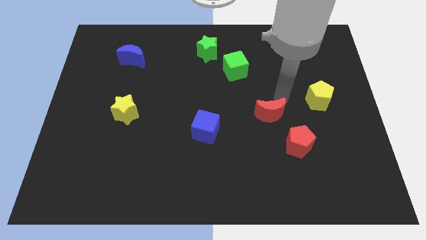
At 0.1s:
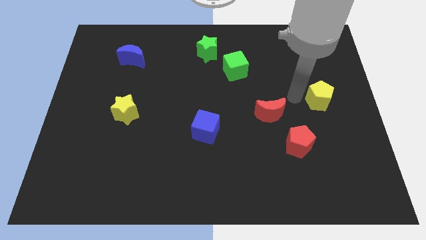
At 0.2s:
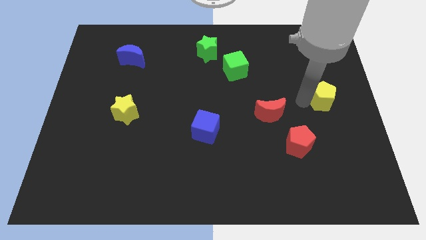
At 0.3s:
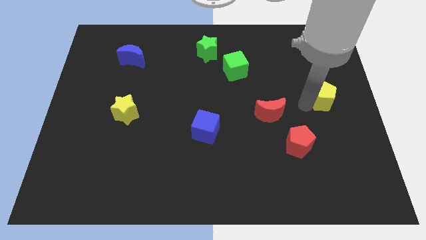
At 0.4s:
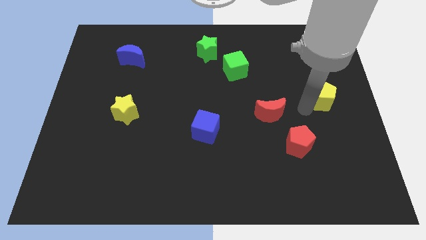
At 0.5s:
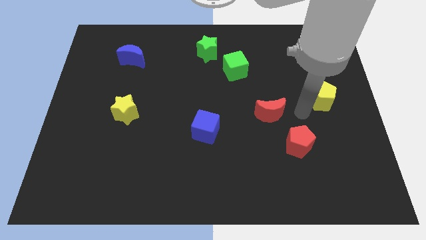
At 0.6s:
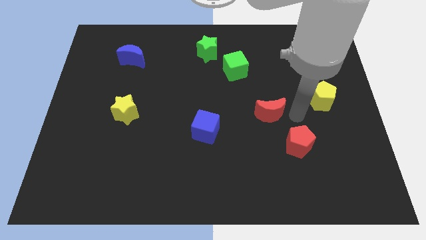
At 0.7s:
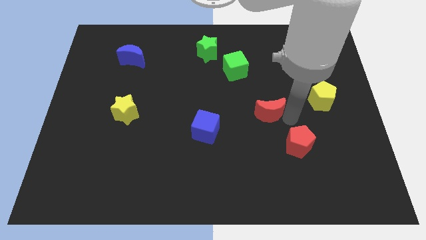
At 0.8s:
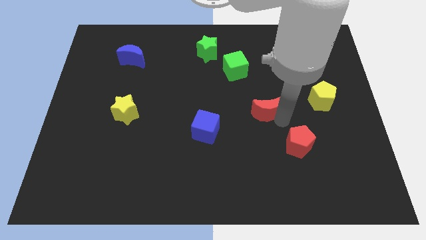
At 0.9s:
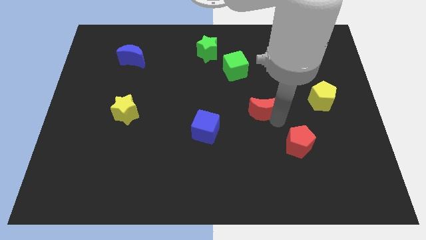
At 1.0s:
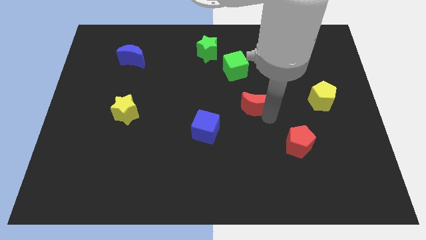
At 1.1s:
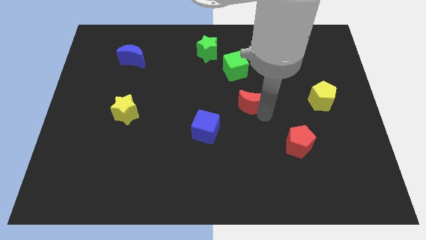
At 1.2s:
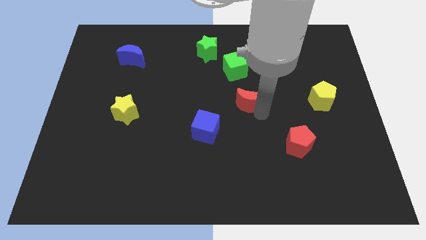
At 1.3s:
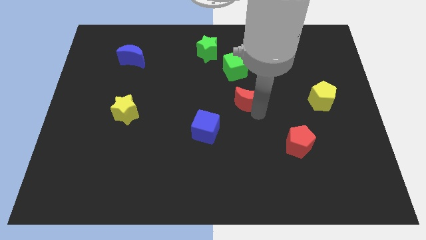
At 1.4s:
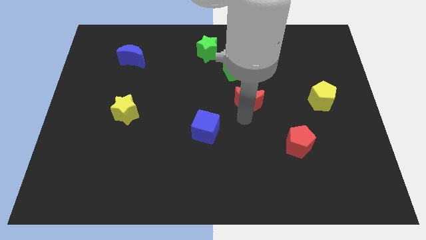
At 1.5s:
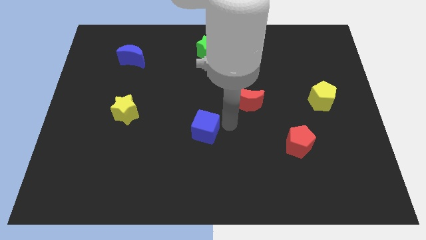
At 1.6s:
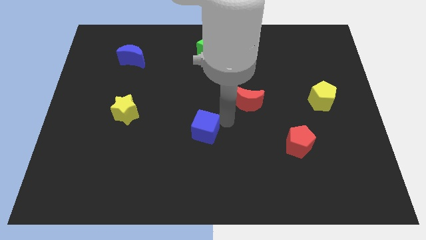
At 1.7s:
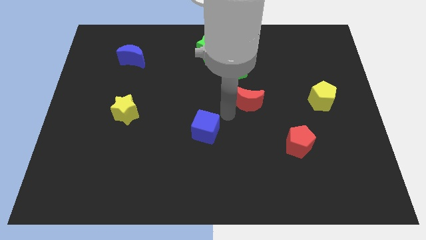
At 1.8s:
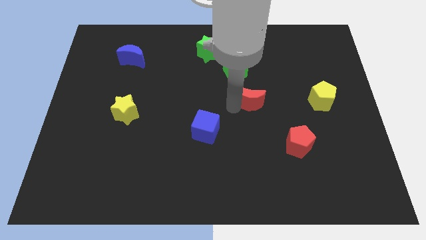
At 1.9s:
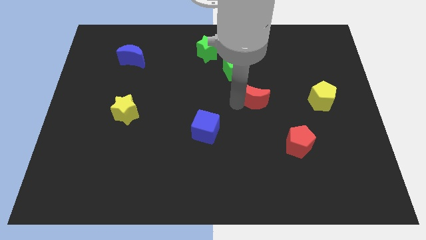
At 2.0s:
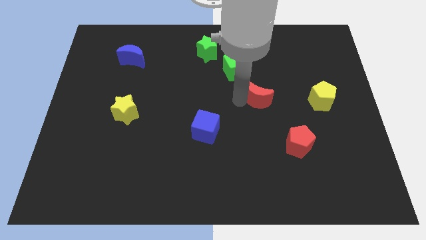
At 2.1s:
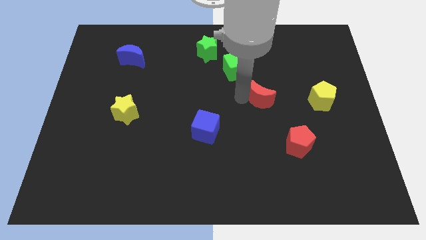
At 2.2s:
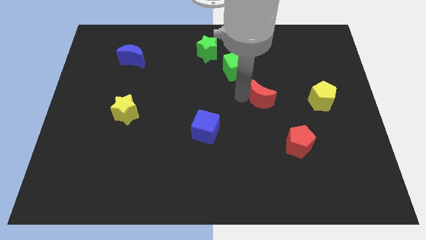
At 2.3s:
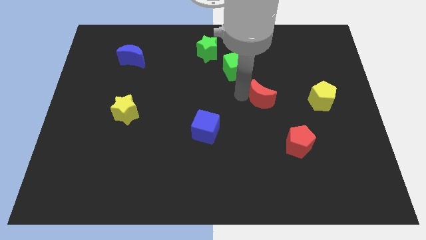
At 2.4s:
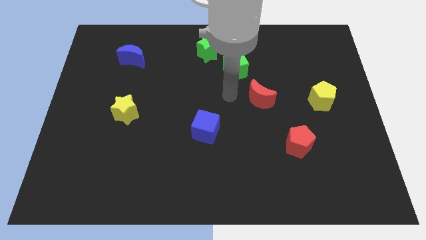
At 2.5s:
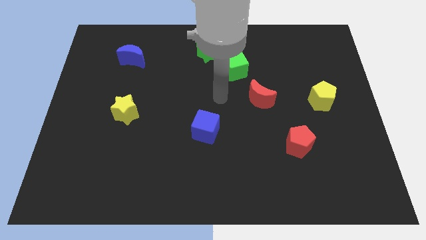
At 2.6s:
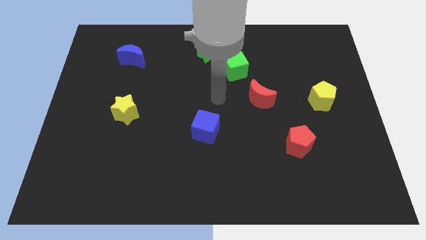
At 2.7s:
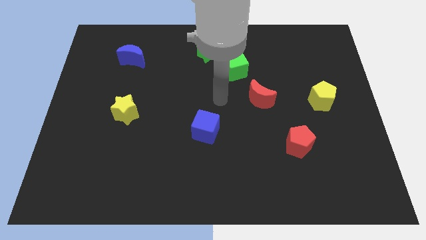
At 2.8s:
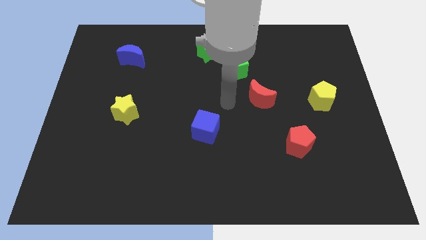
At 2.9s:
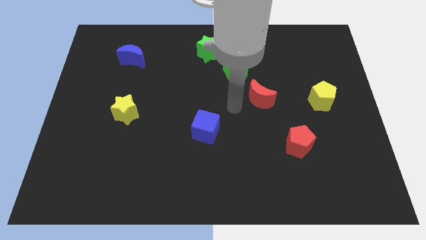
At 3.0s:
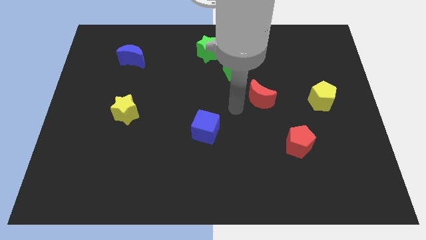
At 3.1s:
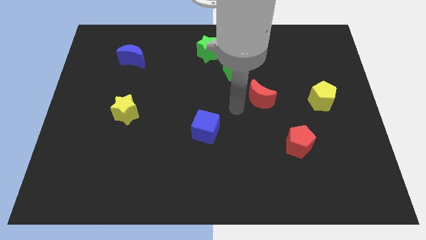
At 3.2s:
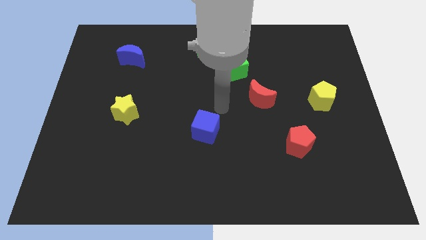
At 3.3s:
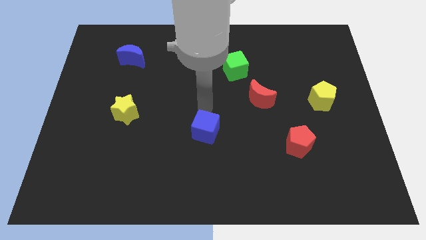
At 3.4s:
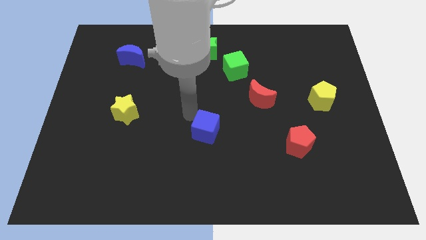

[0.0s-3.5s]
move red crescent slighlty to the left side

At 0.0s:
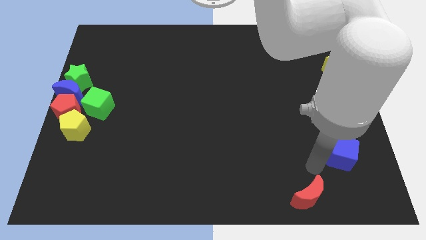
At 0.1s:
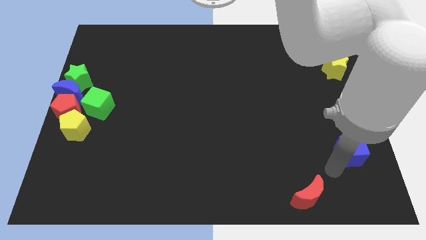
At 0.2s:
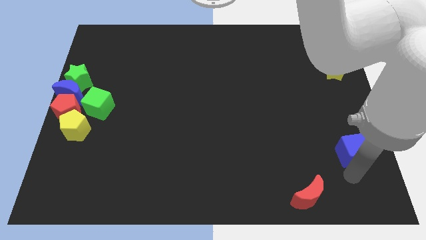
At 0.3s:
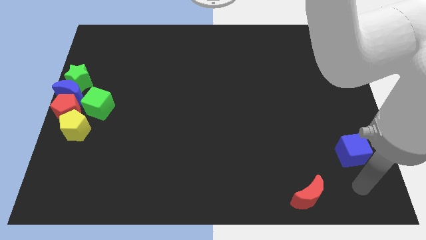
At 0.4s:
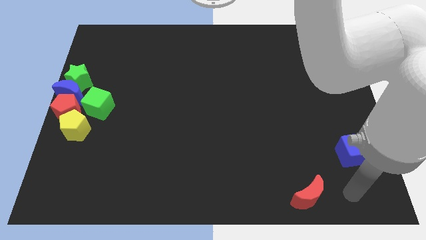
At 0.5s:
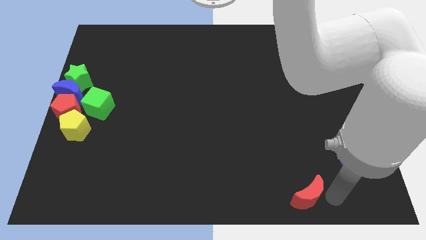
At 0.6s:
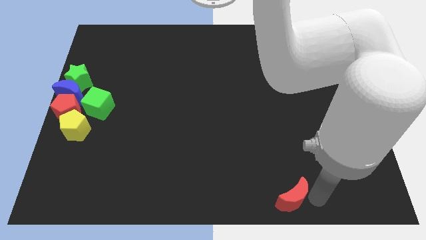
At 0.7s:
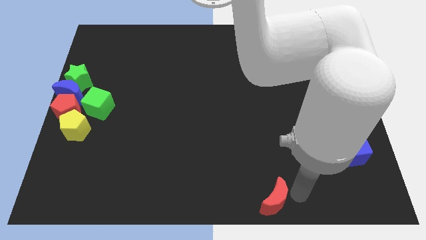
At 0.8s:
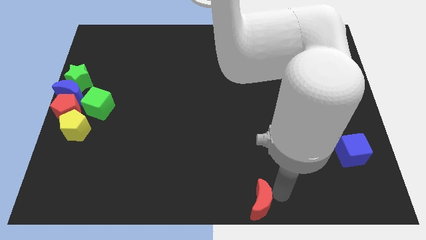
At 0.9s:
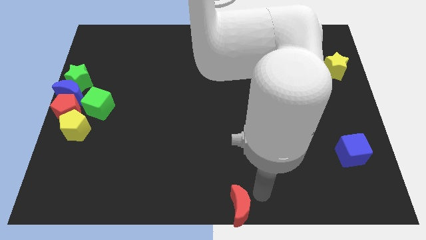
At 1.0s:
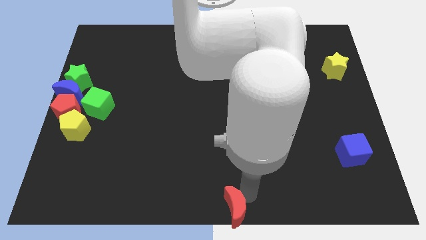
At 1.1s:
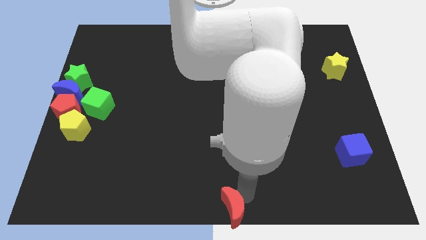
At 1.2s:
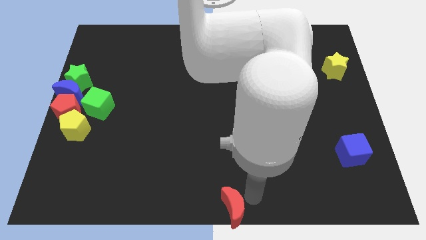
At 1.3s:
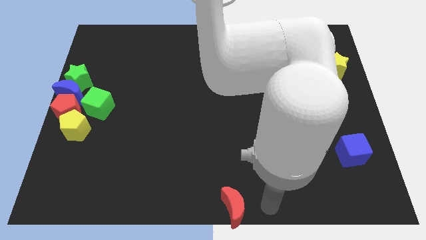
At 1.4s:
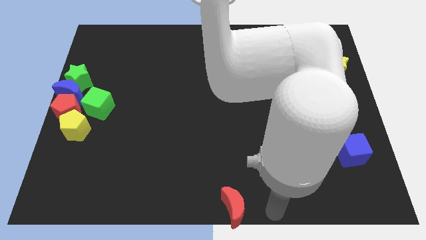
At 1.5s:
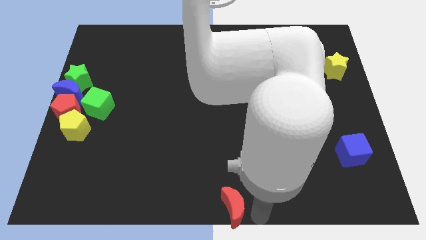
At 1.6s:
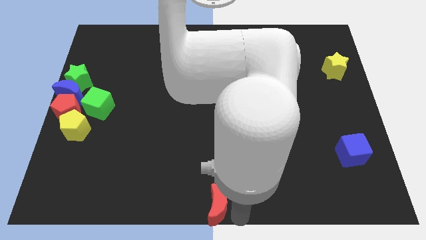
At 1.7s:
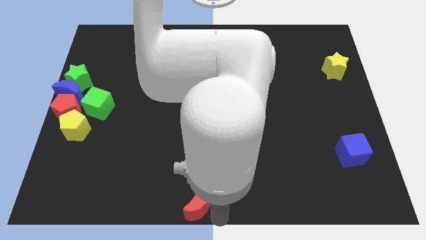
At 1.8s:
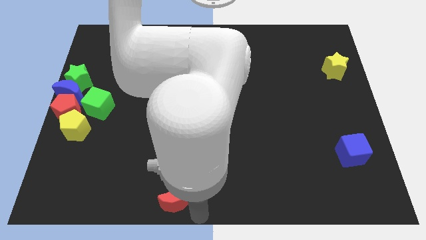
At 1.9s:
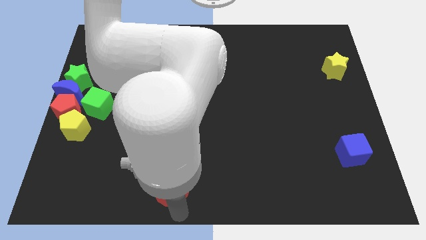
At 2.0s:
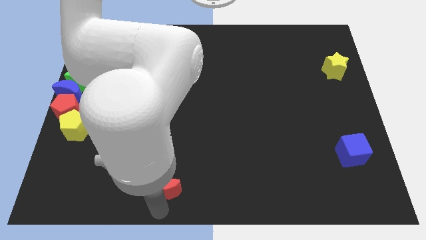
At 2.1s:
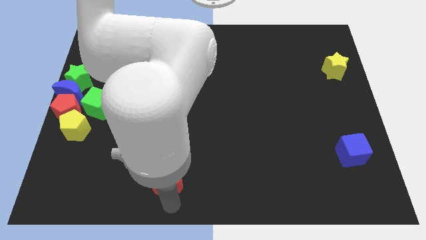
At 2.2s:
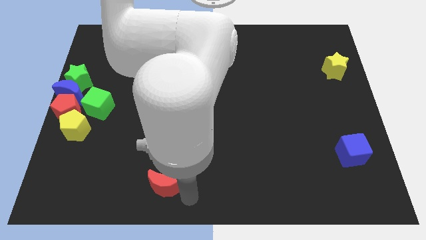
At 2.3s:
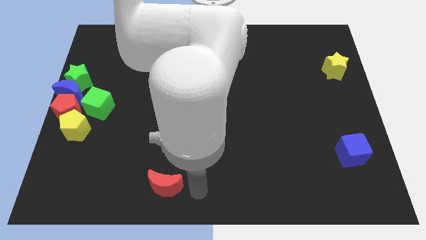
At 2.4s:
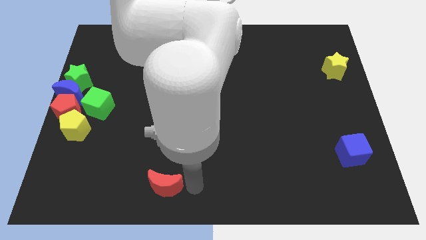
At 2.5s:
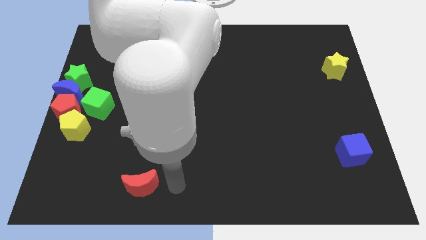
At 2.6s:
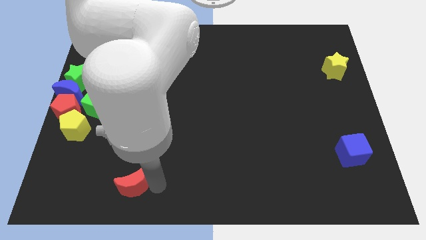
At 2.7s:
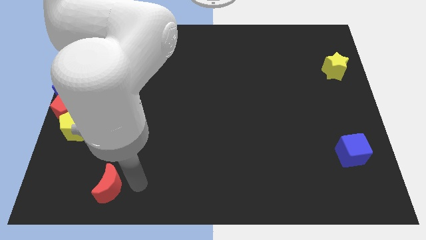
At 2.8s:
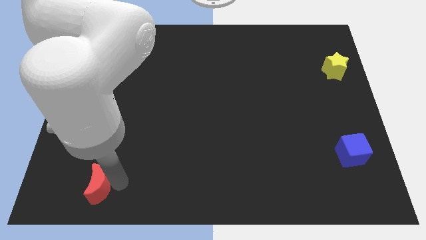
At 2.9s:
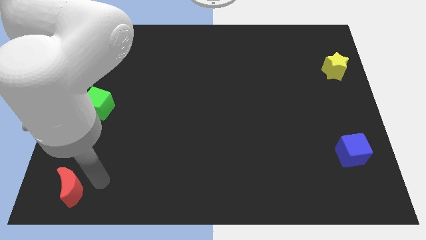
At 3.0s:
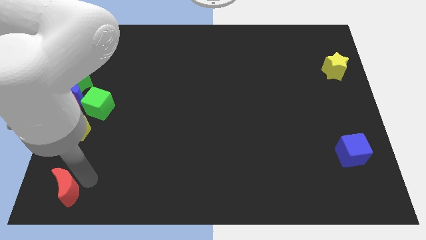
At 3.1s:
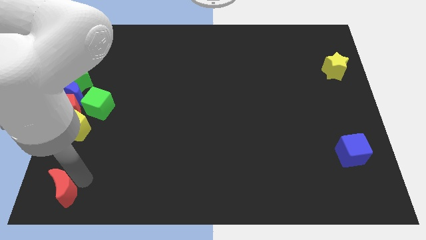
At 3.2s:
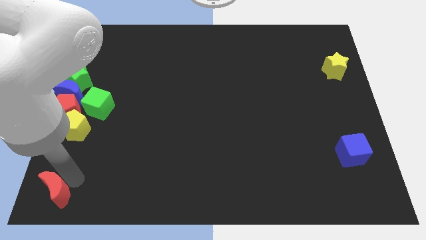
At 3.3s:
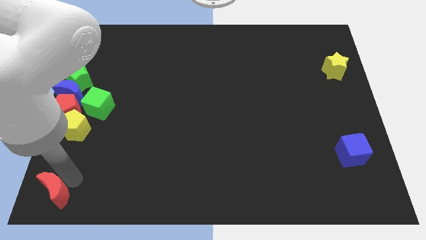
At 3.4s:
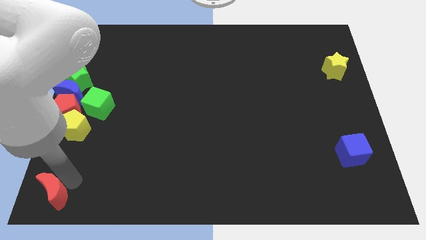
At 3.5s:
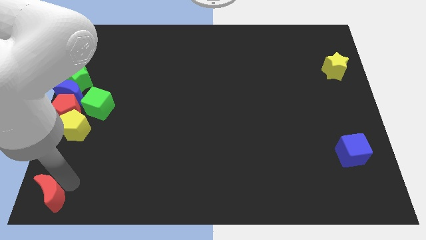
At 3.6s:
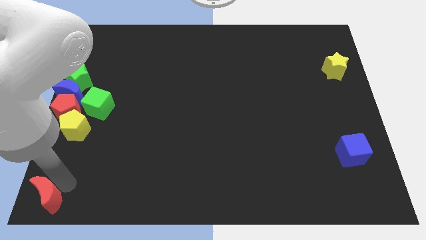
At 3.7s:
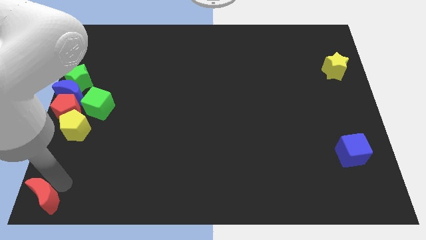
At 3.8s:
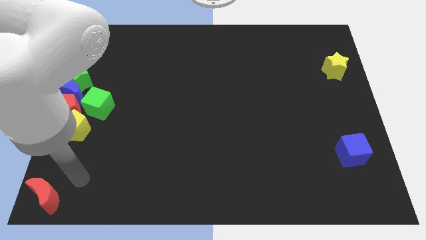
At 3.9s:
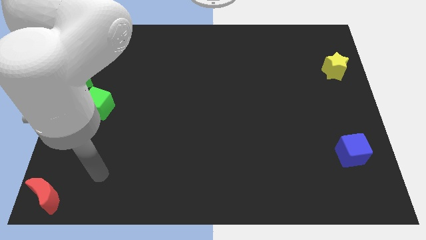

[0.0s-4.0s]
push the red crescent to the bottom left

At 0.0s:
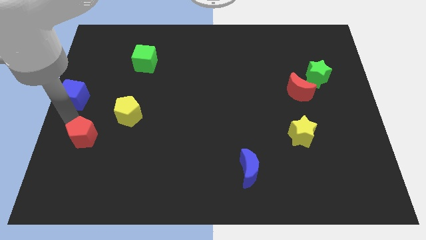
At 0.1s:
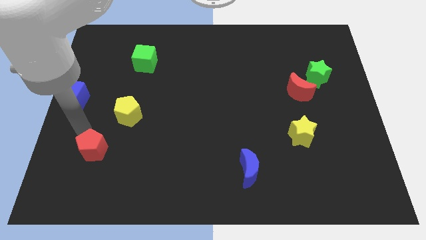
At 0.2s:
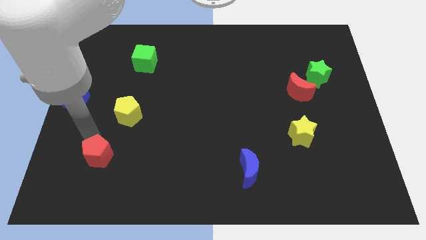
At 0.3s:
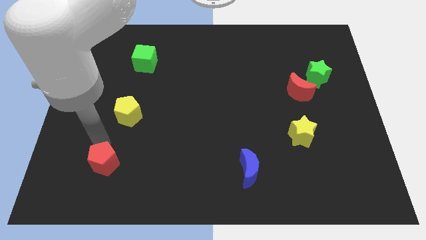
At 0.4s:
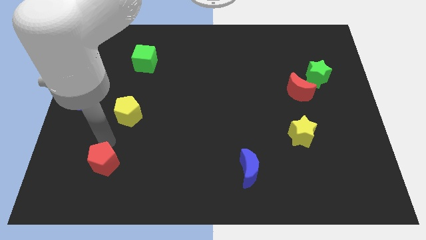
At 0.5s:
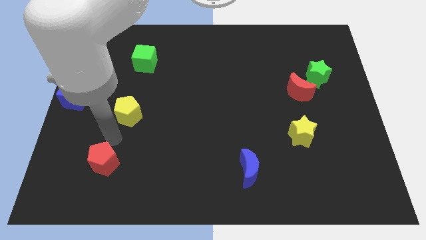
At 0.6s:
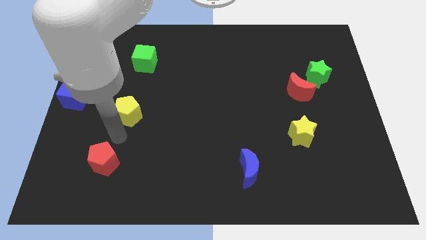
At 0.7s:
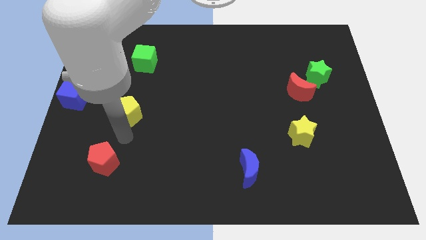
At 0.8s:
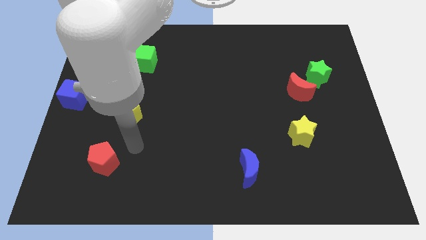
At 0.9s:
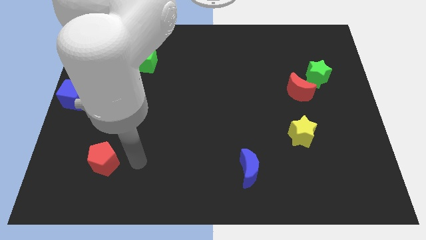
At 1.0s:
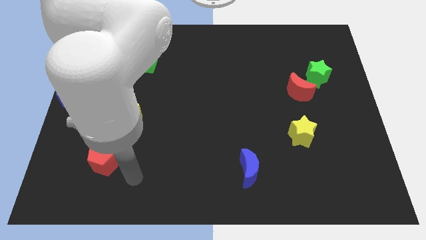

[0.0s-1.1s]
drag the red pentagon slightly downwards

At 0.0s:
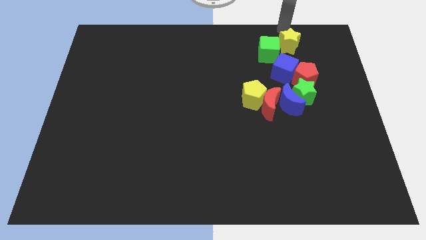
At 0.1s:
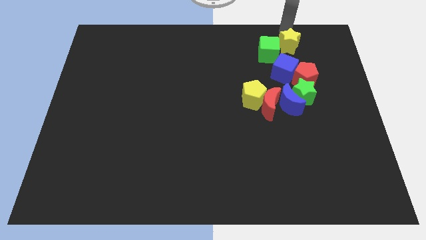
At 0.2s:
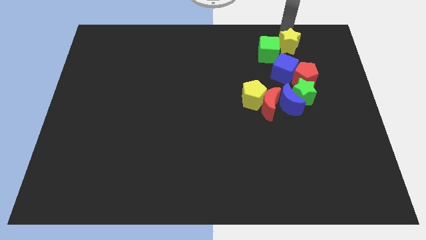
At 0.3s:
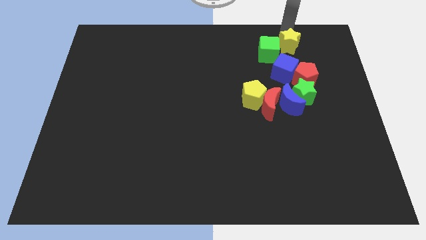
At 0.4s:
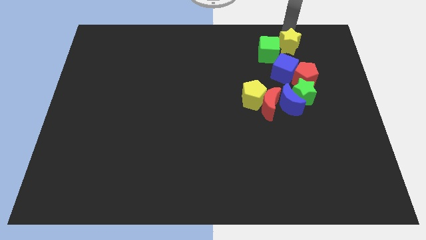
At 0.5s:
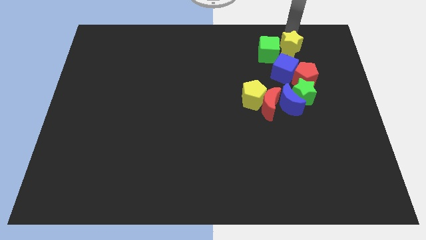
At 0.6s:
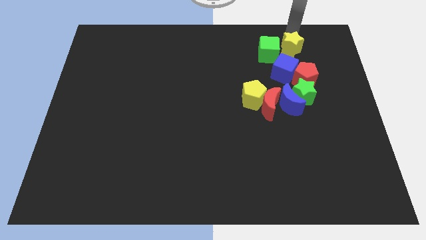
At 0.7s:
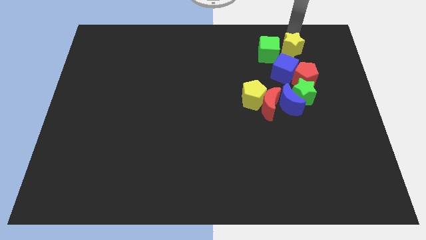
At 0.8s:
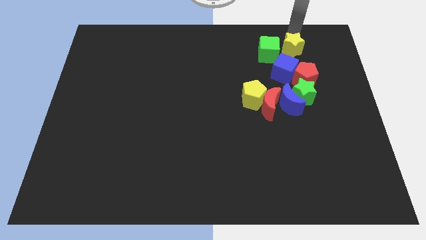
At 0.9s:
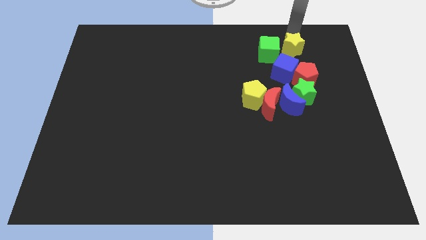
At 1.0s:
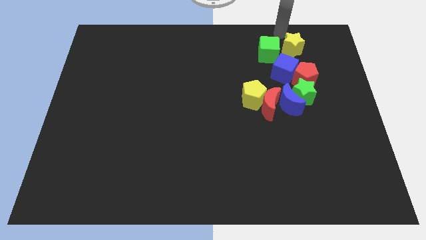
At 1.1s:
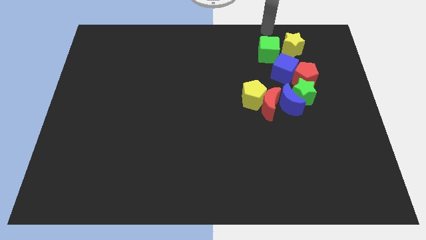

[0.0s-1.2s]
place the yellow star to the right of the green cube
